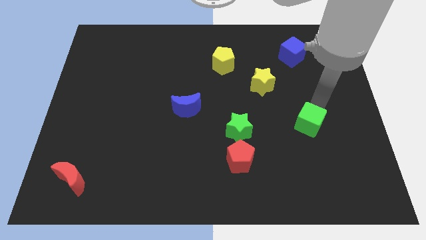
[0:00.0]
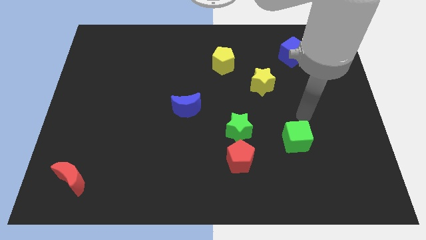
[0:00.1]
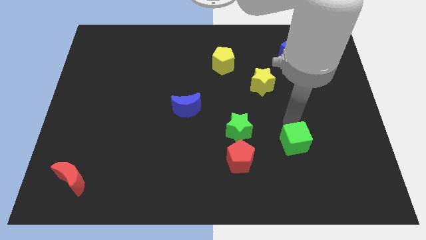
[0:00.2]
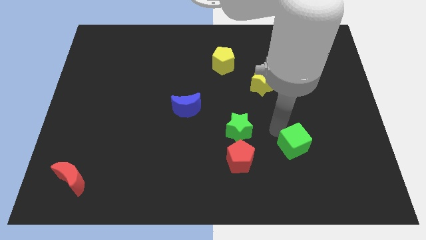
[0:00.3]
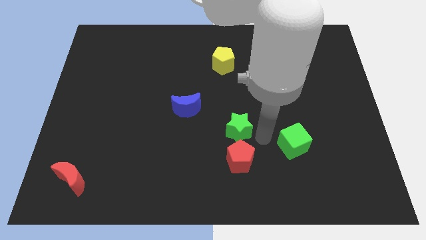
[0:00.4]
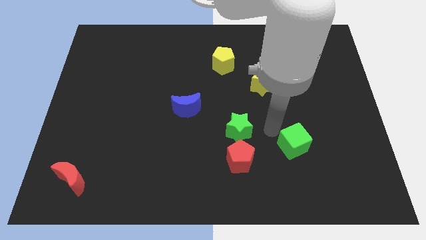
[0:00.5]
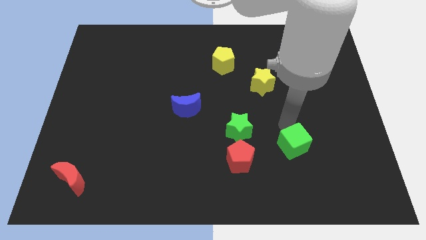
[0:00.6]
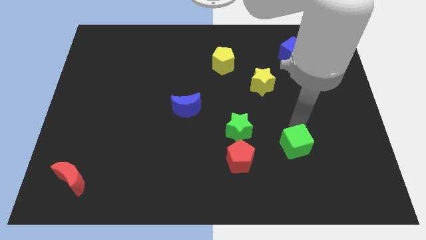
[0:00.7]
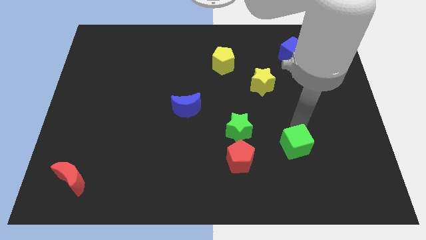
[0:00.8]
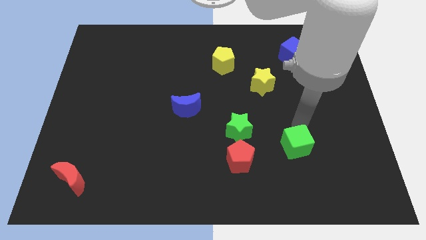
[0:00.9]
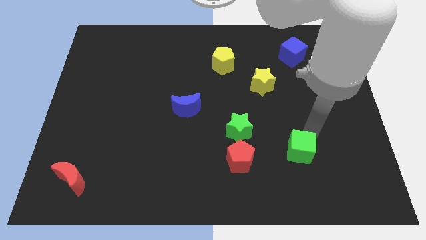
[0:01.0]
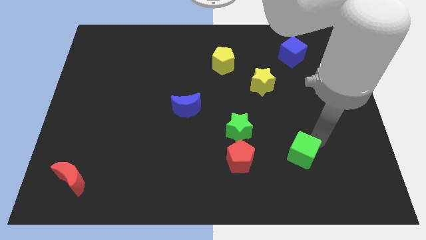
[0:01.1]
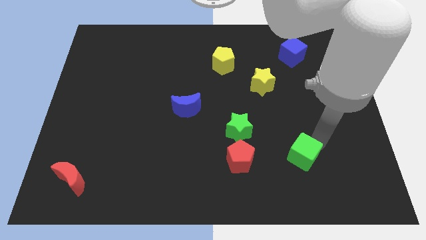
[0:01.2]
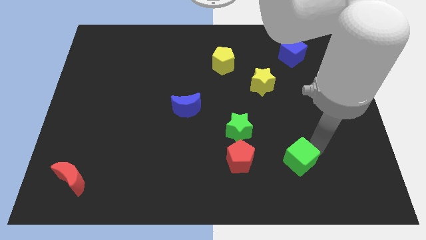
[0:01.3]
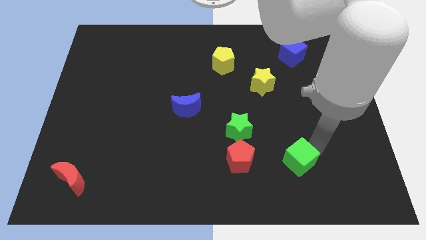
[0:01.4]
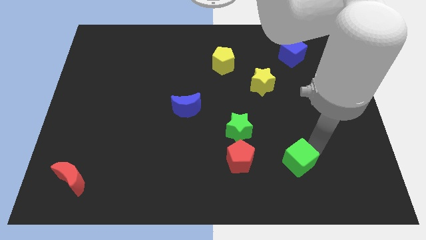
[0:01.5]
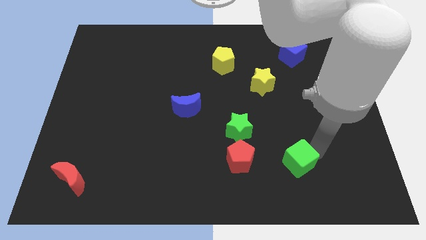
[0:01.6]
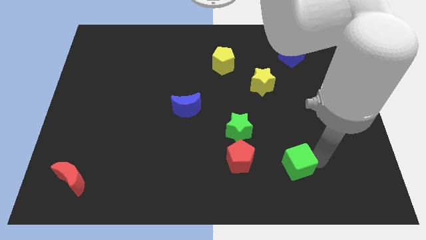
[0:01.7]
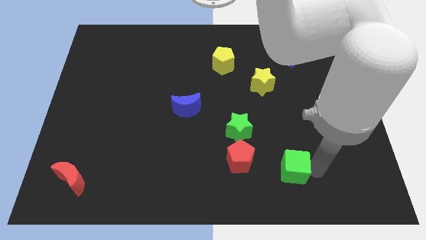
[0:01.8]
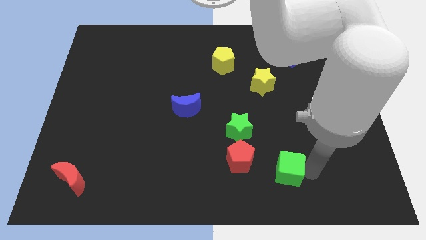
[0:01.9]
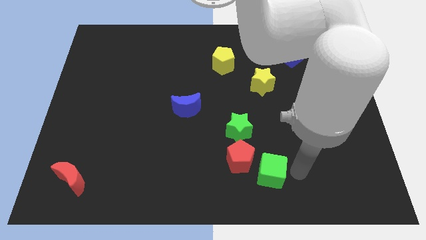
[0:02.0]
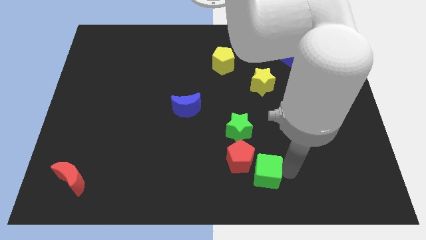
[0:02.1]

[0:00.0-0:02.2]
push the green cube towards the red pentagon

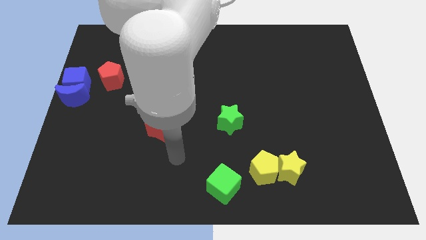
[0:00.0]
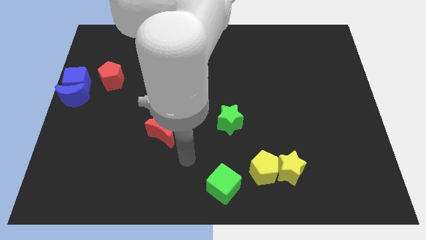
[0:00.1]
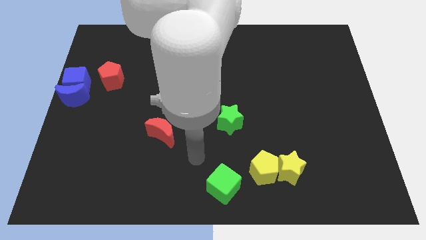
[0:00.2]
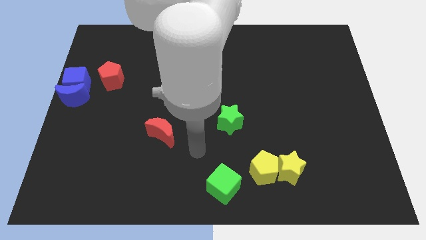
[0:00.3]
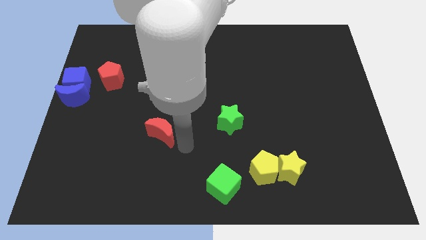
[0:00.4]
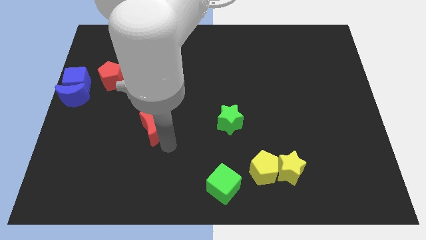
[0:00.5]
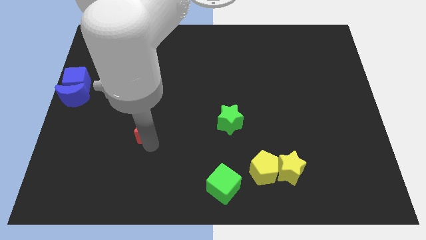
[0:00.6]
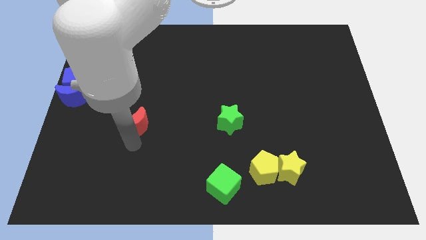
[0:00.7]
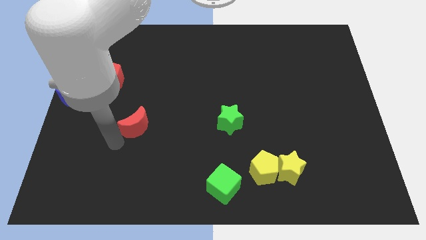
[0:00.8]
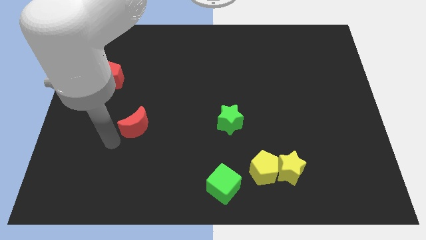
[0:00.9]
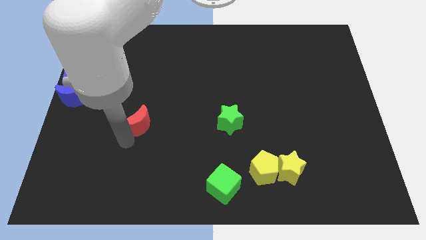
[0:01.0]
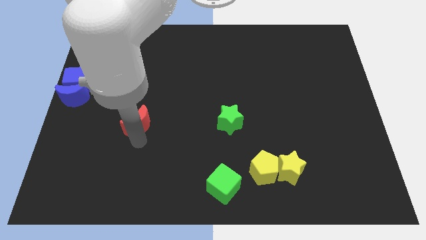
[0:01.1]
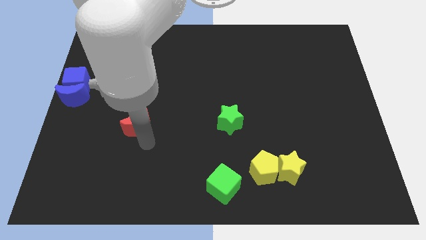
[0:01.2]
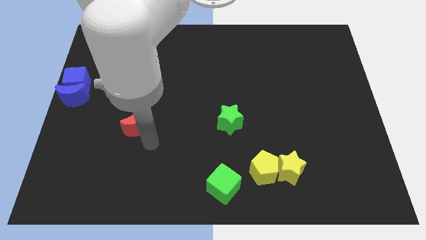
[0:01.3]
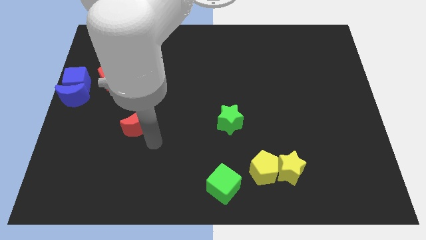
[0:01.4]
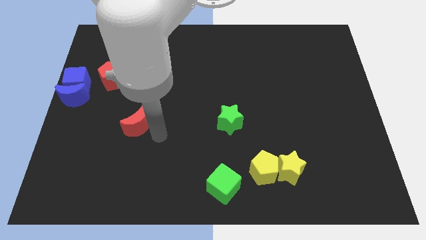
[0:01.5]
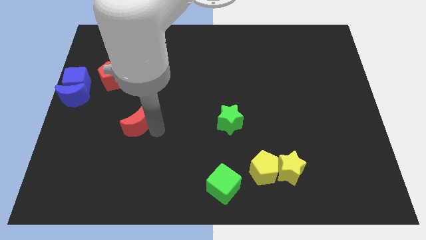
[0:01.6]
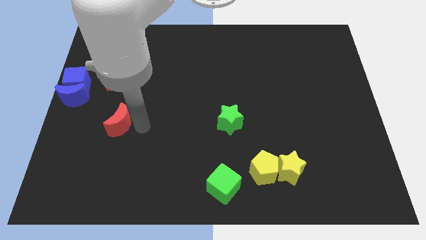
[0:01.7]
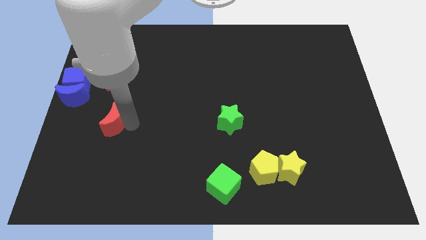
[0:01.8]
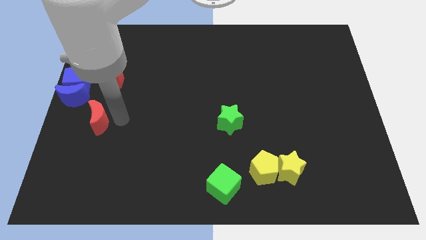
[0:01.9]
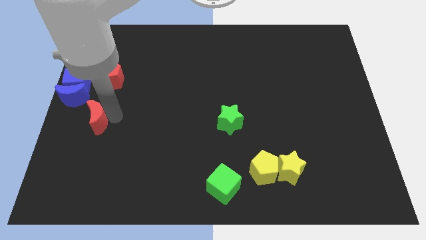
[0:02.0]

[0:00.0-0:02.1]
place the red moon vertically below the red pentagon

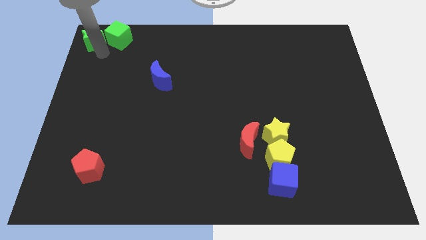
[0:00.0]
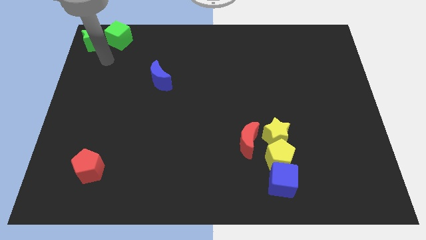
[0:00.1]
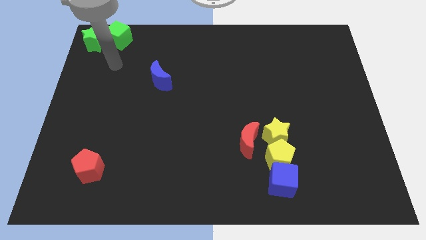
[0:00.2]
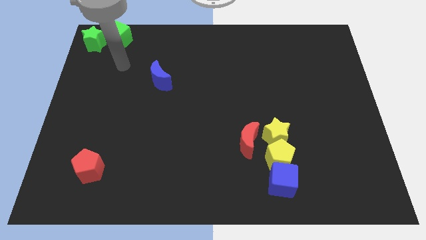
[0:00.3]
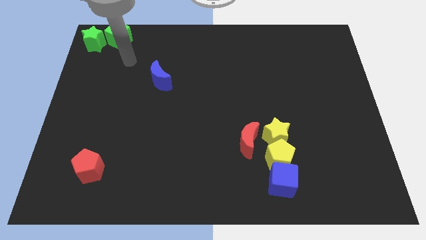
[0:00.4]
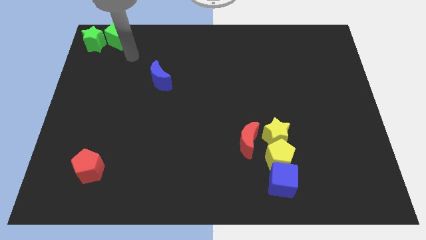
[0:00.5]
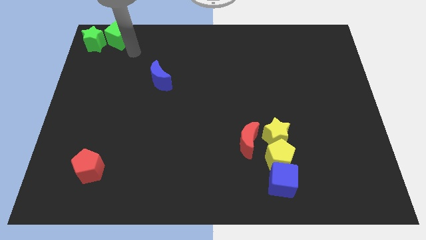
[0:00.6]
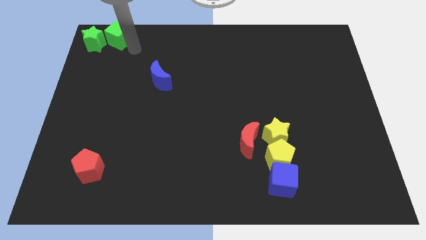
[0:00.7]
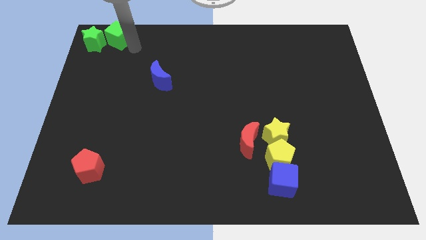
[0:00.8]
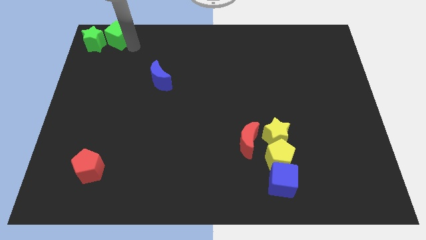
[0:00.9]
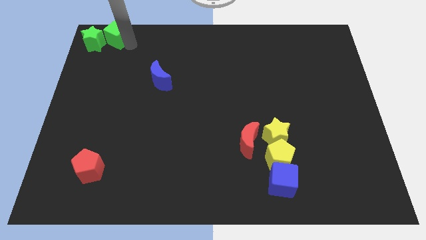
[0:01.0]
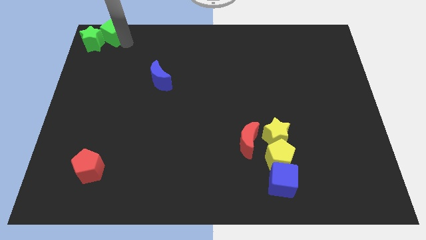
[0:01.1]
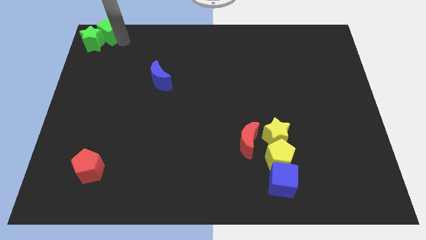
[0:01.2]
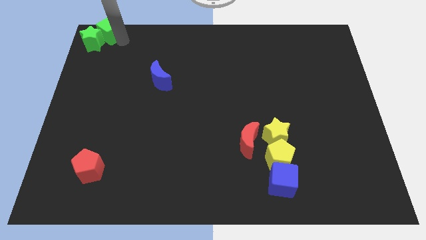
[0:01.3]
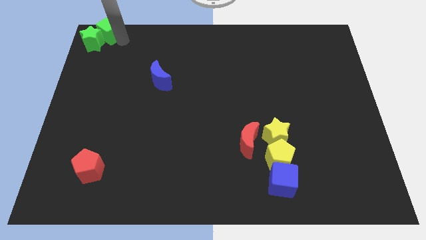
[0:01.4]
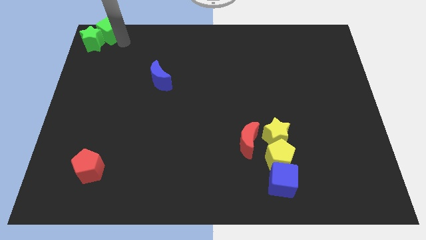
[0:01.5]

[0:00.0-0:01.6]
move green cube into green star

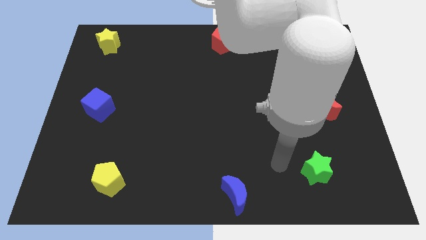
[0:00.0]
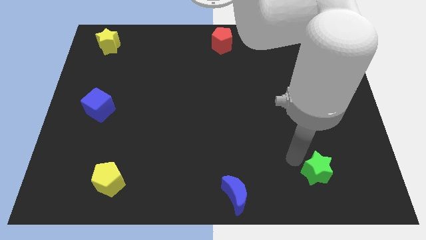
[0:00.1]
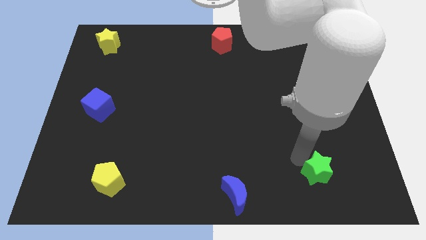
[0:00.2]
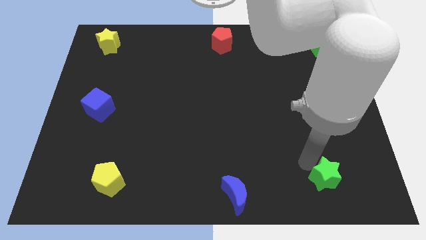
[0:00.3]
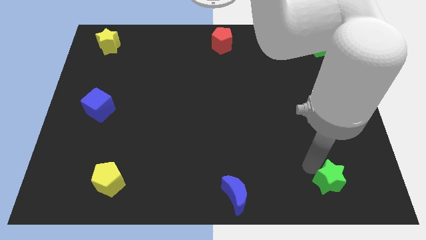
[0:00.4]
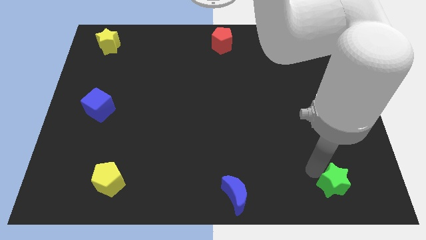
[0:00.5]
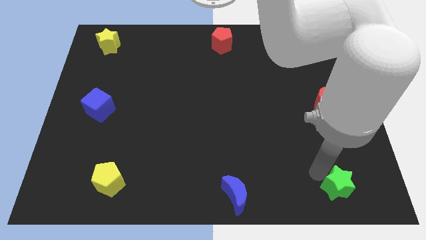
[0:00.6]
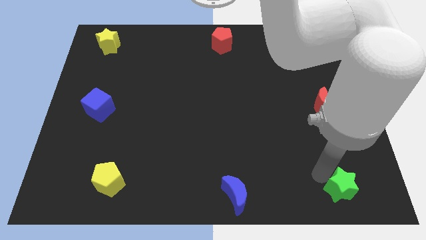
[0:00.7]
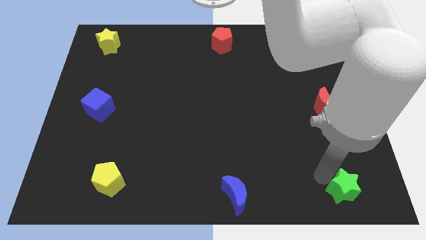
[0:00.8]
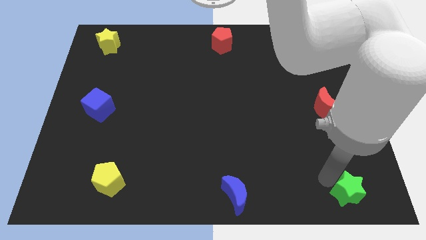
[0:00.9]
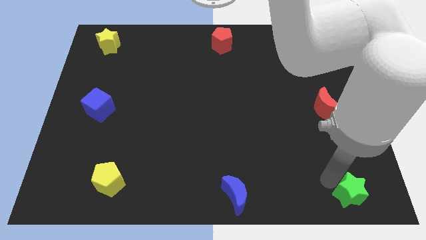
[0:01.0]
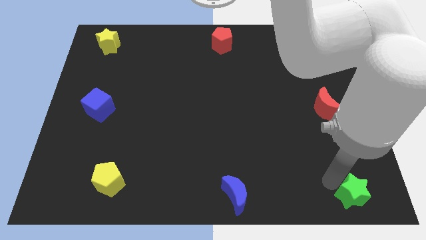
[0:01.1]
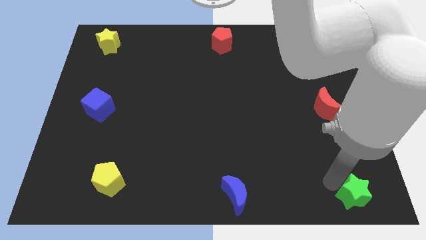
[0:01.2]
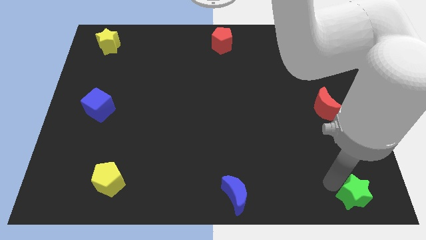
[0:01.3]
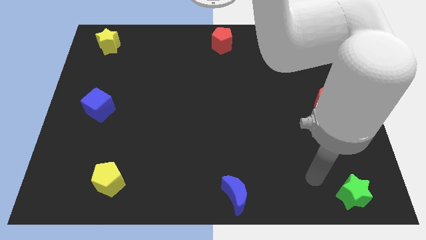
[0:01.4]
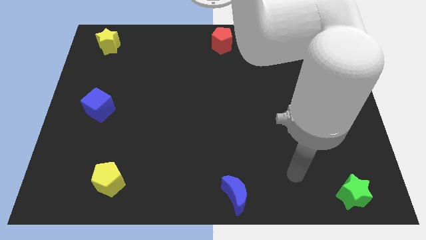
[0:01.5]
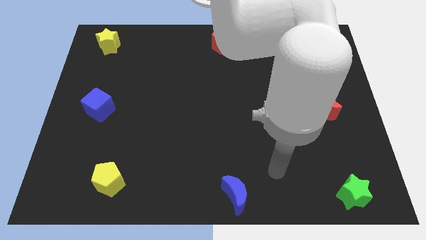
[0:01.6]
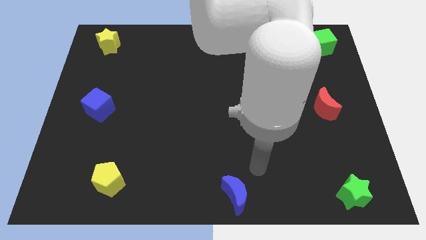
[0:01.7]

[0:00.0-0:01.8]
place the green star at the bottom right side

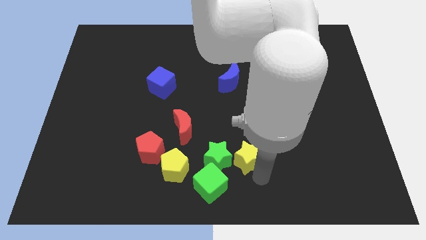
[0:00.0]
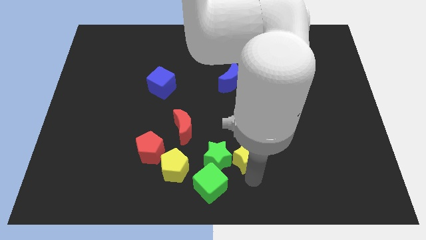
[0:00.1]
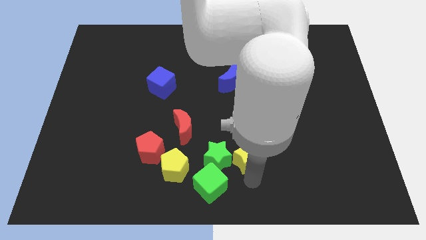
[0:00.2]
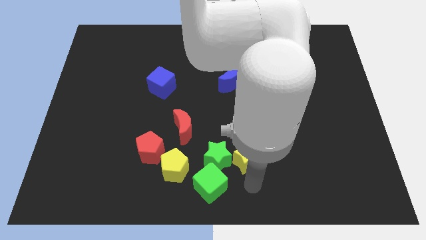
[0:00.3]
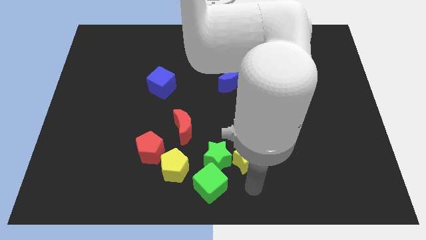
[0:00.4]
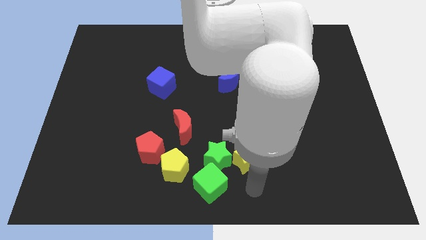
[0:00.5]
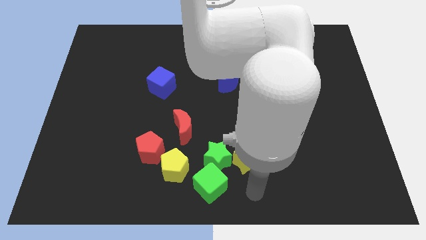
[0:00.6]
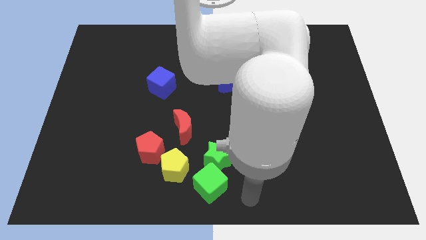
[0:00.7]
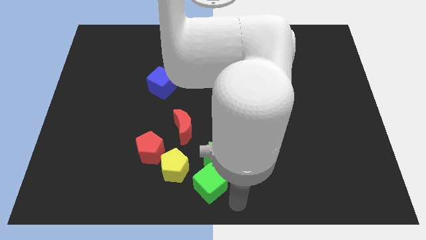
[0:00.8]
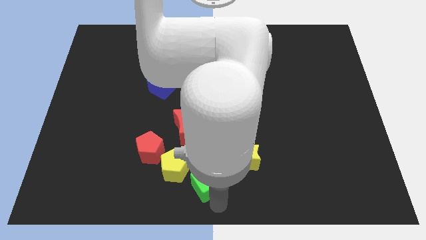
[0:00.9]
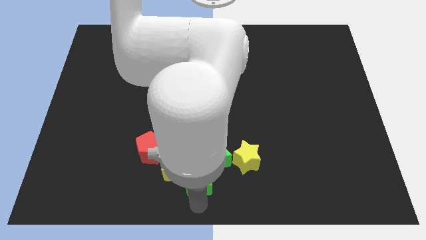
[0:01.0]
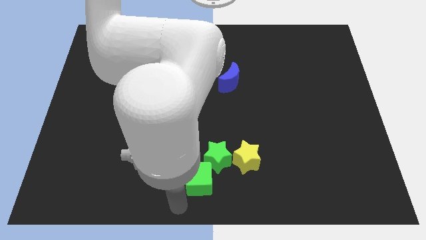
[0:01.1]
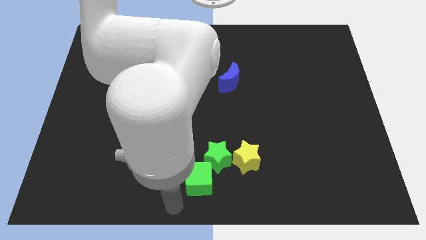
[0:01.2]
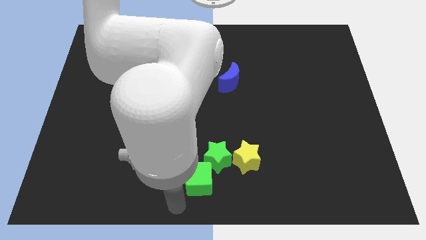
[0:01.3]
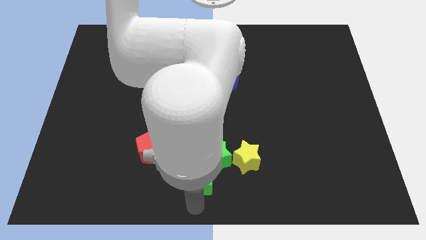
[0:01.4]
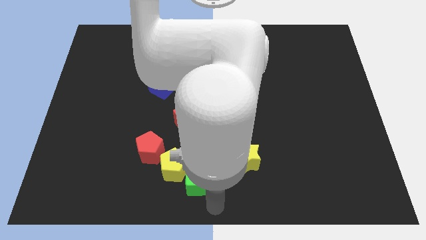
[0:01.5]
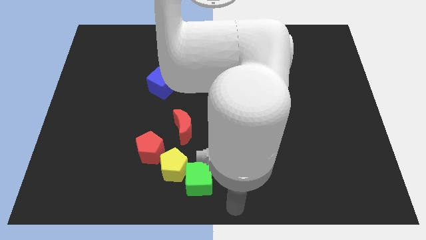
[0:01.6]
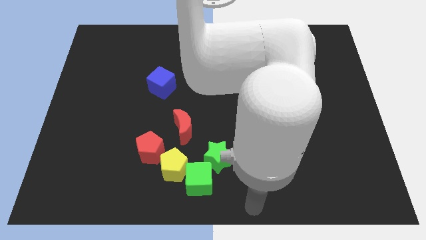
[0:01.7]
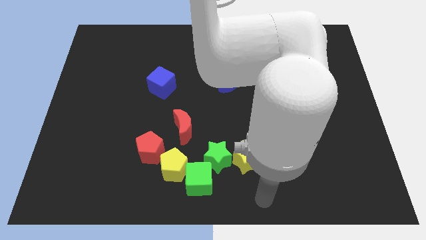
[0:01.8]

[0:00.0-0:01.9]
slightly push the green cube into yellow pentagon to the right
